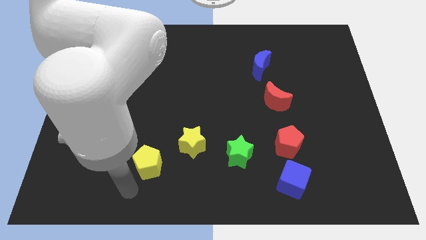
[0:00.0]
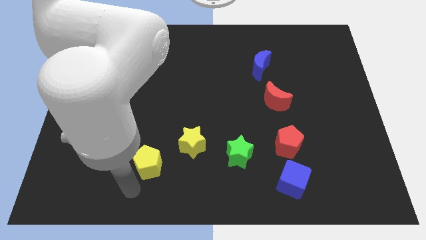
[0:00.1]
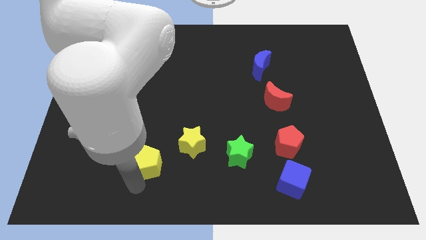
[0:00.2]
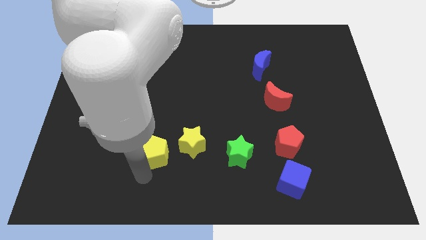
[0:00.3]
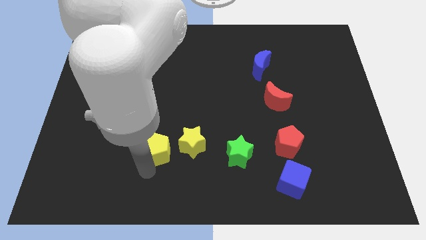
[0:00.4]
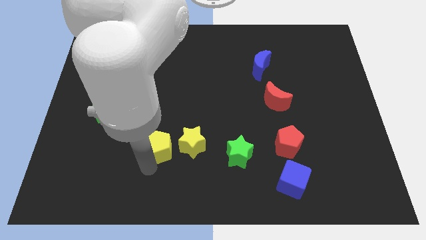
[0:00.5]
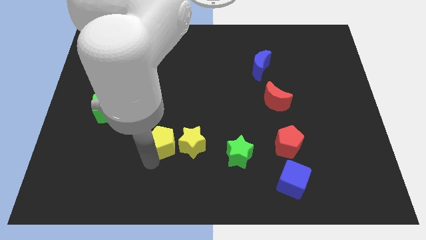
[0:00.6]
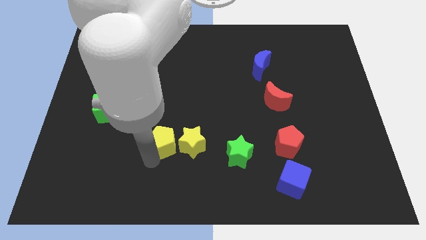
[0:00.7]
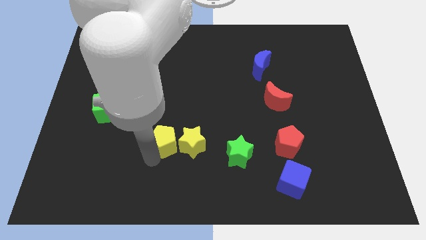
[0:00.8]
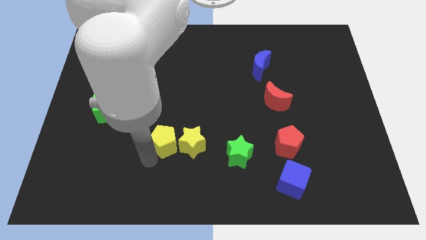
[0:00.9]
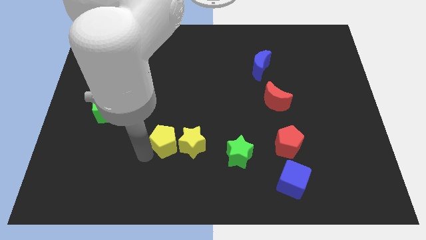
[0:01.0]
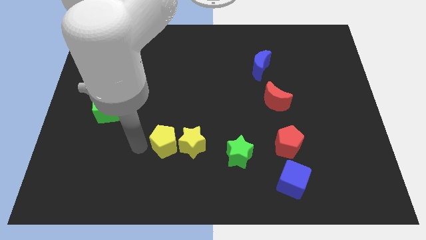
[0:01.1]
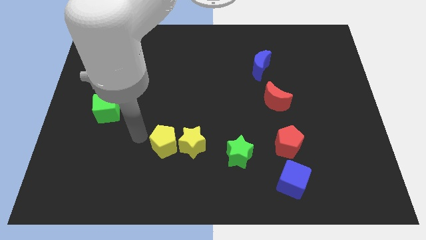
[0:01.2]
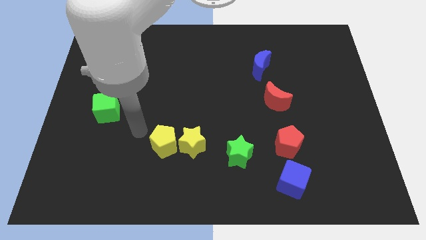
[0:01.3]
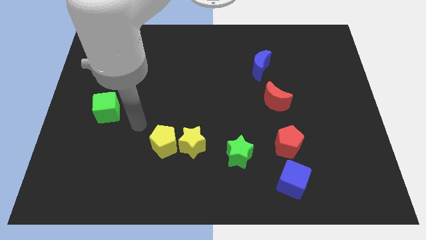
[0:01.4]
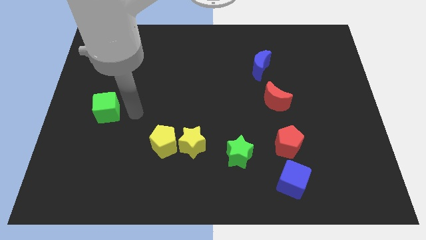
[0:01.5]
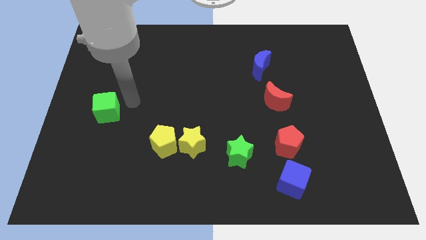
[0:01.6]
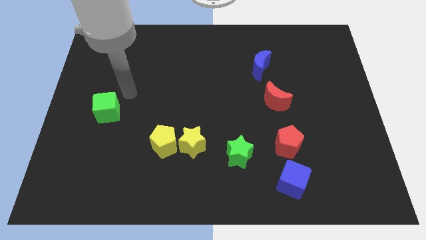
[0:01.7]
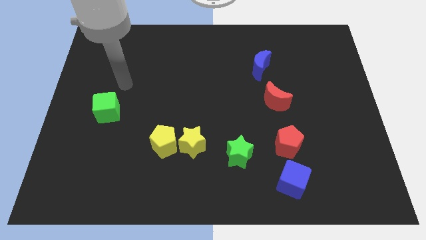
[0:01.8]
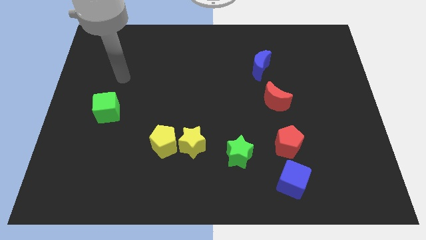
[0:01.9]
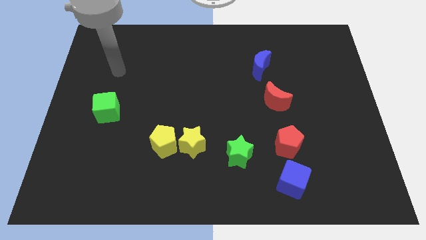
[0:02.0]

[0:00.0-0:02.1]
drag the yellow pentagon close to yellow star

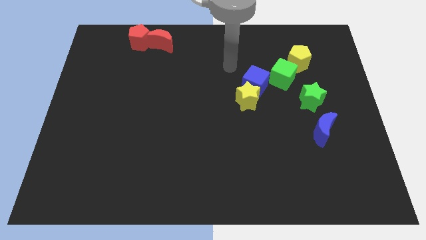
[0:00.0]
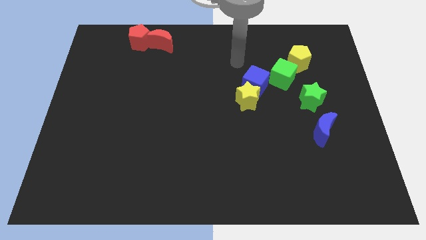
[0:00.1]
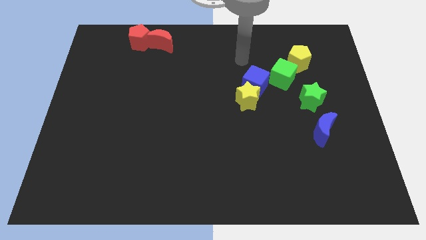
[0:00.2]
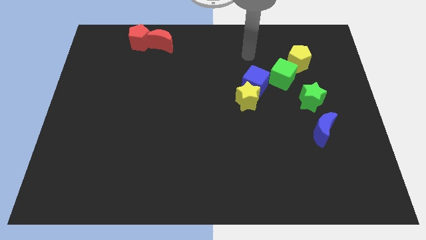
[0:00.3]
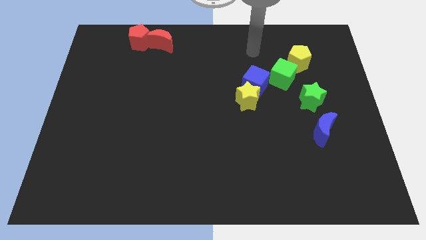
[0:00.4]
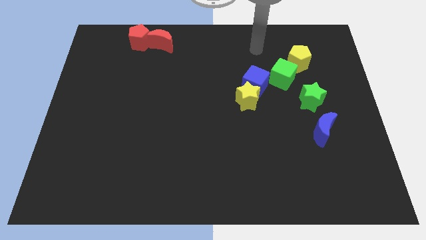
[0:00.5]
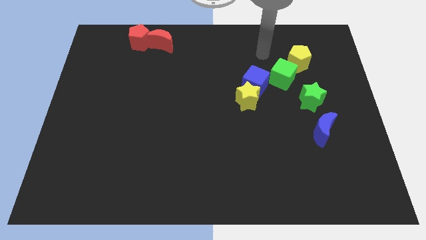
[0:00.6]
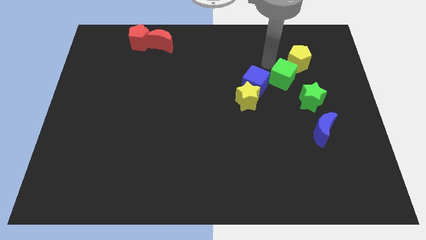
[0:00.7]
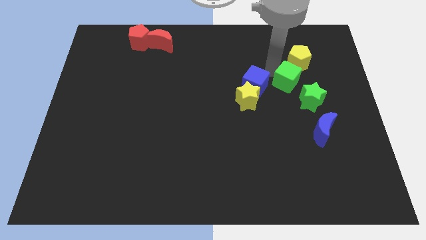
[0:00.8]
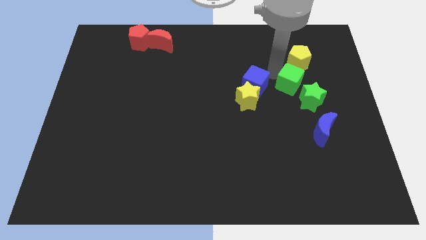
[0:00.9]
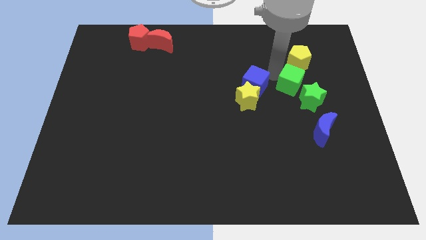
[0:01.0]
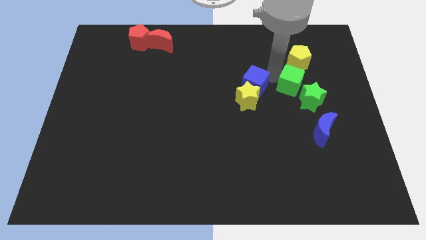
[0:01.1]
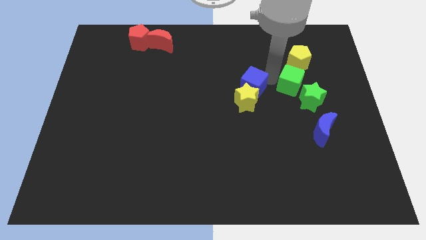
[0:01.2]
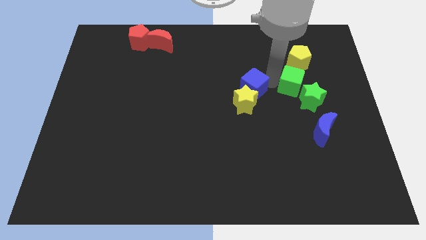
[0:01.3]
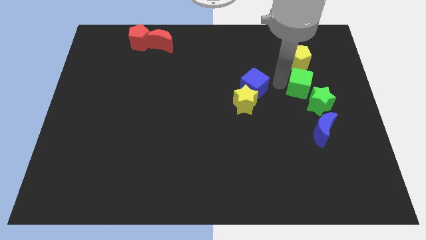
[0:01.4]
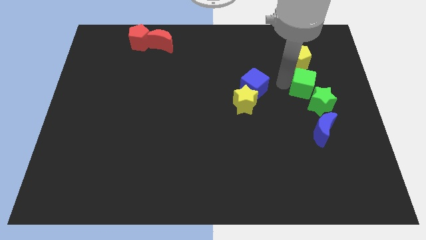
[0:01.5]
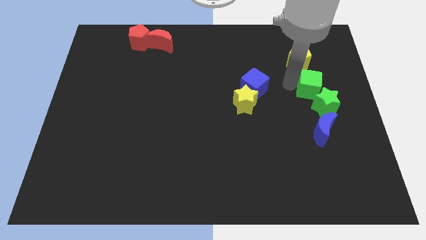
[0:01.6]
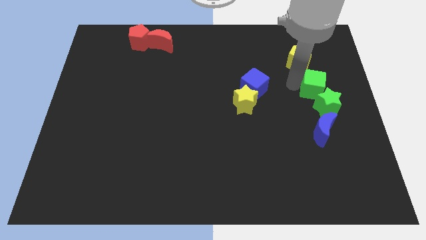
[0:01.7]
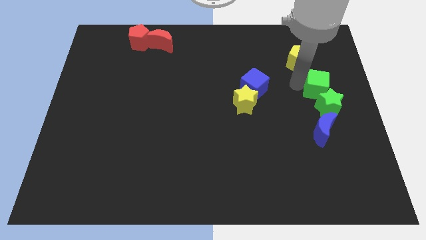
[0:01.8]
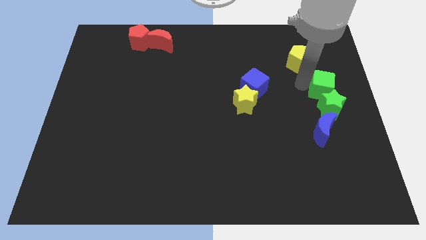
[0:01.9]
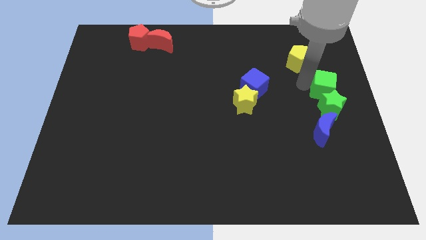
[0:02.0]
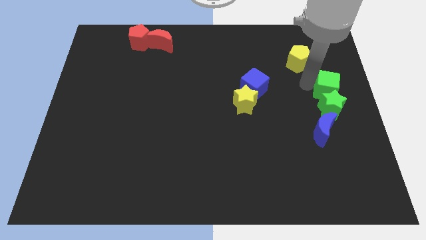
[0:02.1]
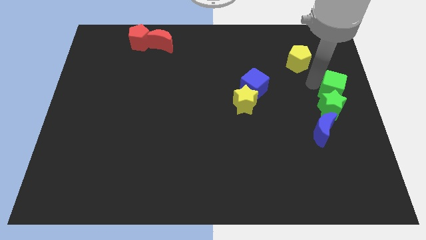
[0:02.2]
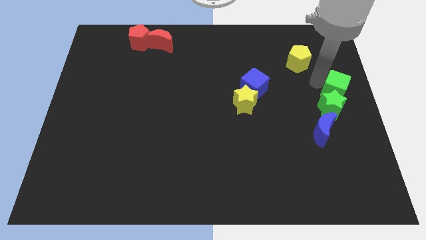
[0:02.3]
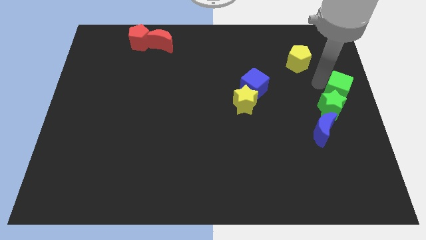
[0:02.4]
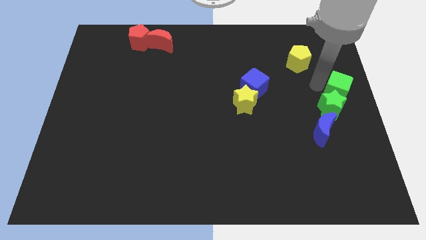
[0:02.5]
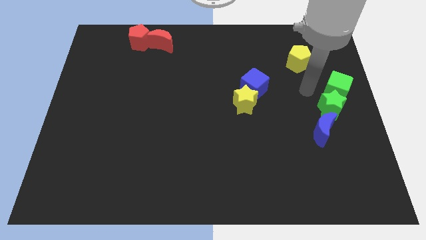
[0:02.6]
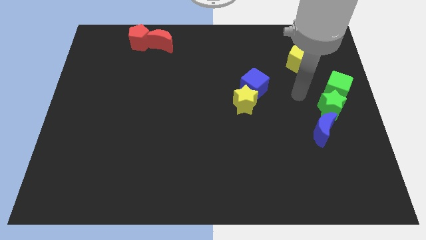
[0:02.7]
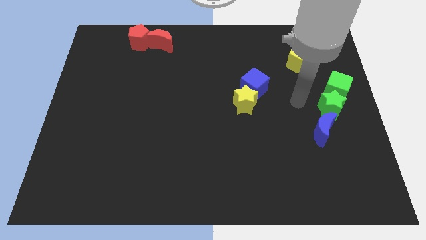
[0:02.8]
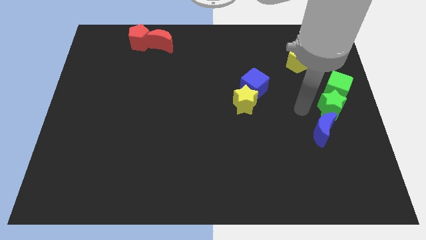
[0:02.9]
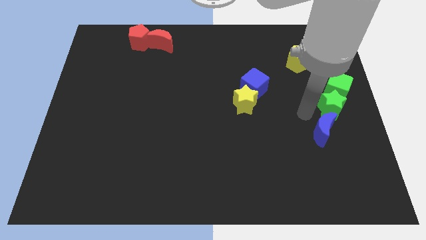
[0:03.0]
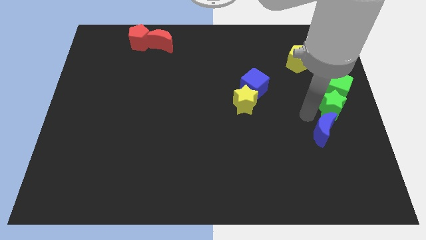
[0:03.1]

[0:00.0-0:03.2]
push green cube into the green star

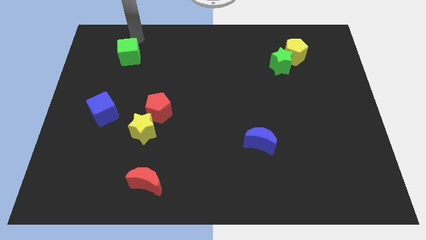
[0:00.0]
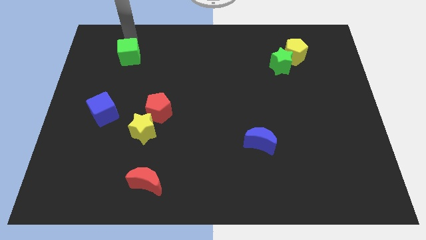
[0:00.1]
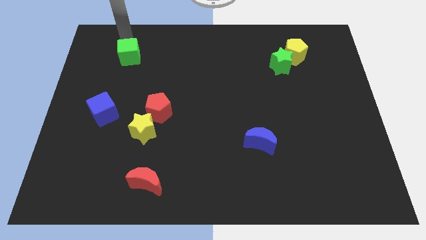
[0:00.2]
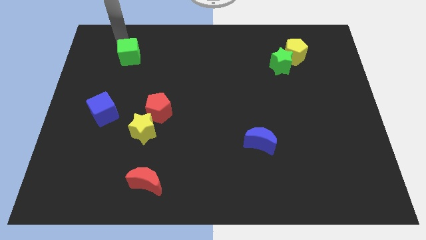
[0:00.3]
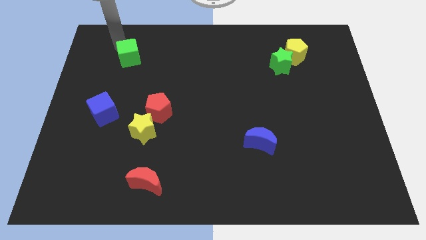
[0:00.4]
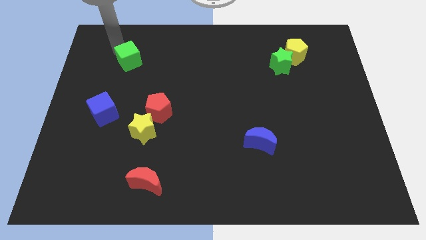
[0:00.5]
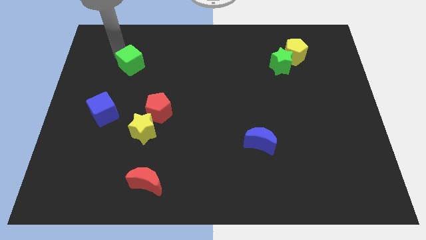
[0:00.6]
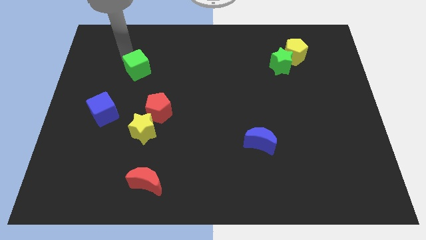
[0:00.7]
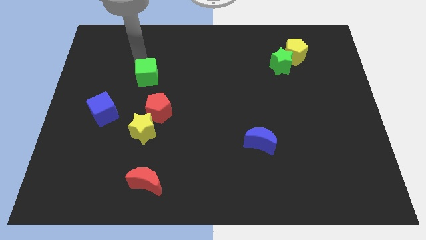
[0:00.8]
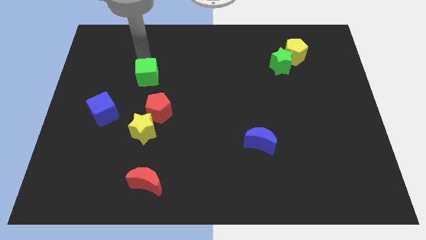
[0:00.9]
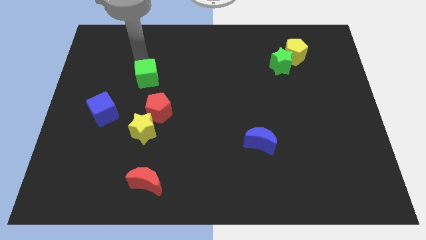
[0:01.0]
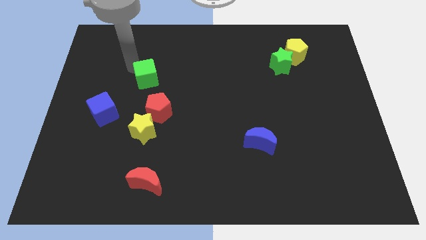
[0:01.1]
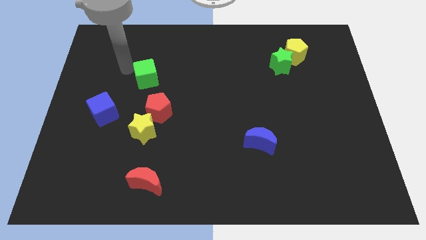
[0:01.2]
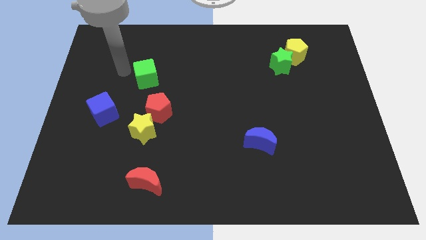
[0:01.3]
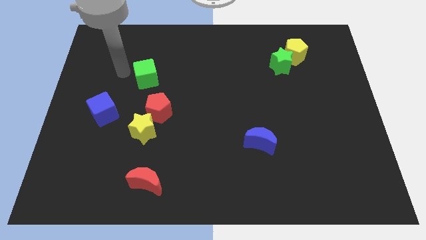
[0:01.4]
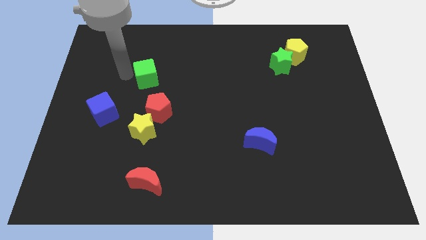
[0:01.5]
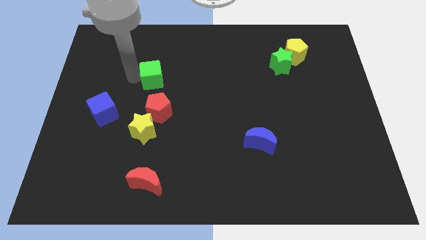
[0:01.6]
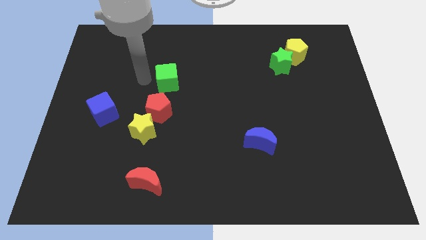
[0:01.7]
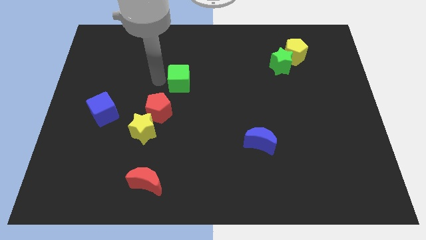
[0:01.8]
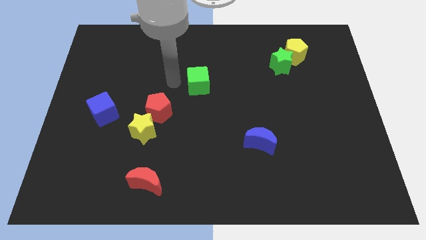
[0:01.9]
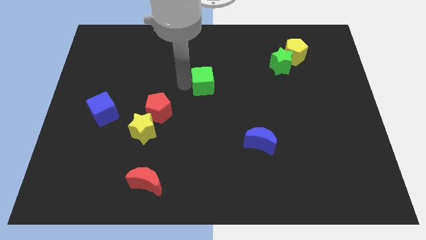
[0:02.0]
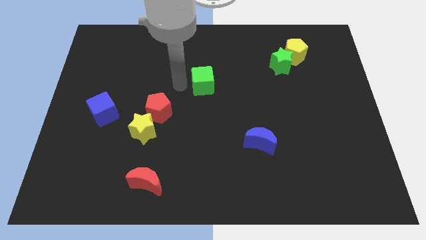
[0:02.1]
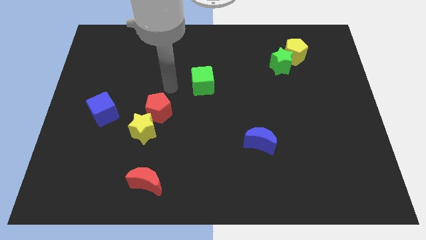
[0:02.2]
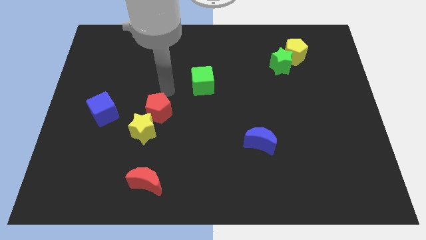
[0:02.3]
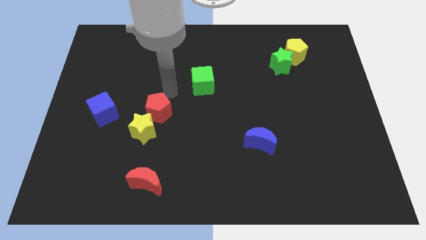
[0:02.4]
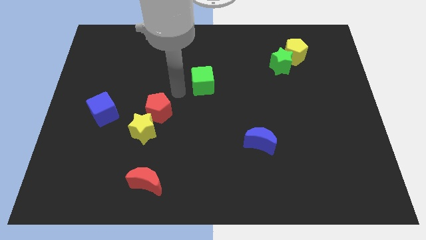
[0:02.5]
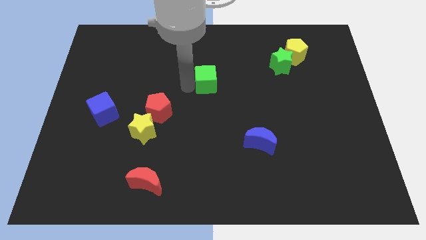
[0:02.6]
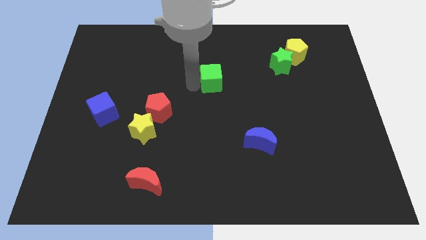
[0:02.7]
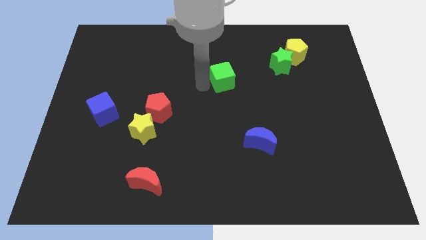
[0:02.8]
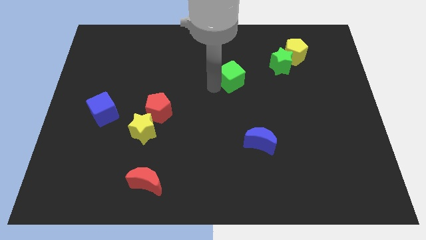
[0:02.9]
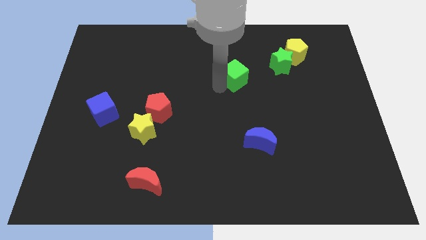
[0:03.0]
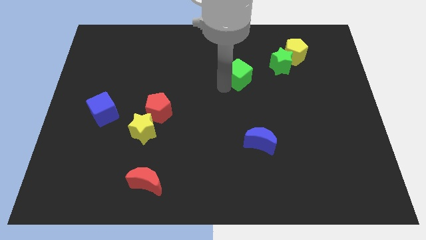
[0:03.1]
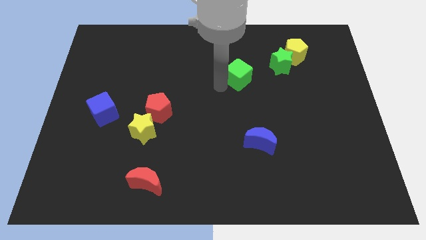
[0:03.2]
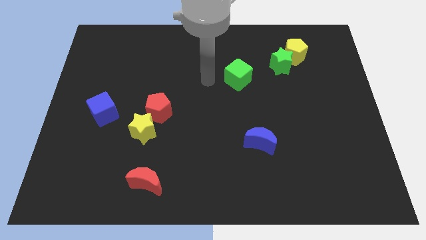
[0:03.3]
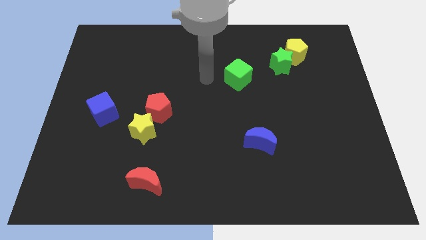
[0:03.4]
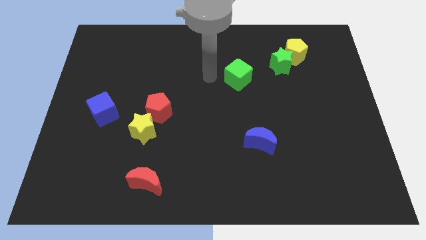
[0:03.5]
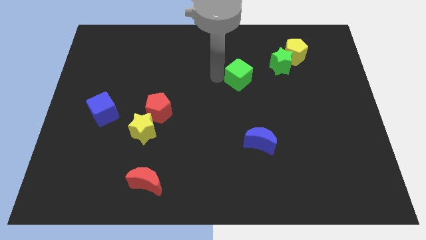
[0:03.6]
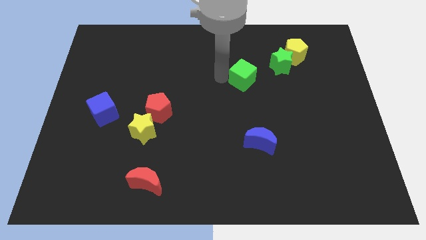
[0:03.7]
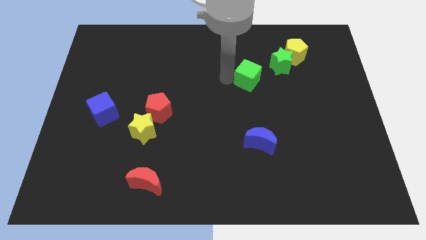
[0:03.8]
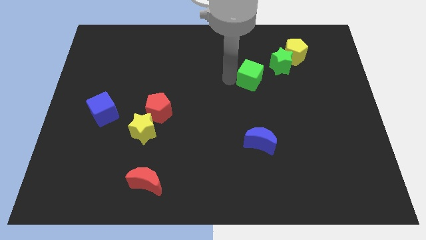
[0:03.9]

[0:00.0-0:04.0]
place the green cube parallel above the blue moon
